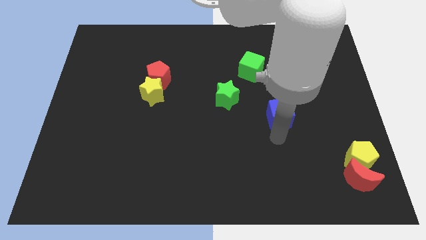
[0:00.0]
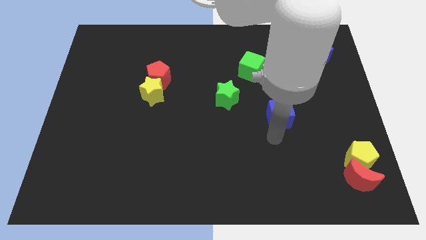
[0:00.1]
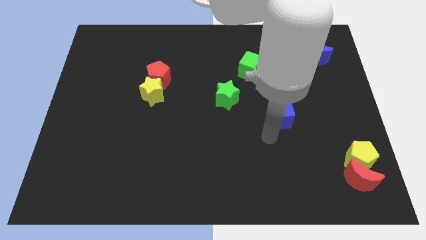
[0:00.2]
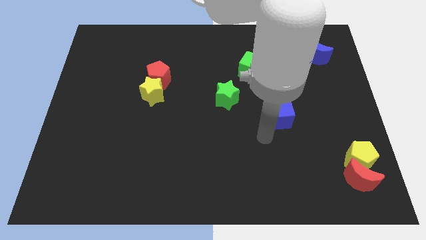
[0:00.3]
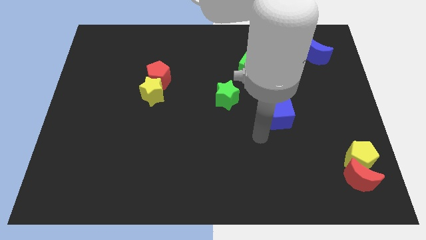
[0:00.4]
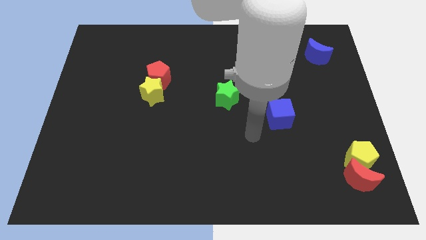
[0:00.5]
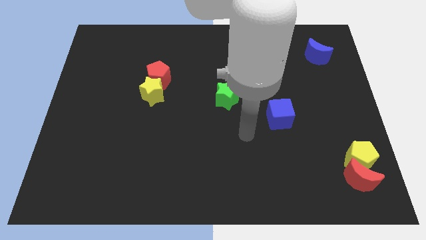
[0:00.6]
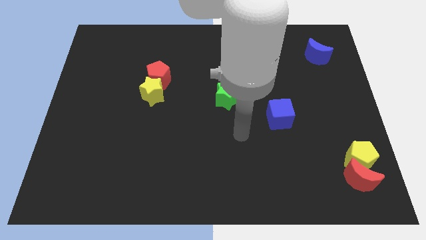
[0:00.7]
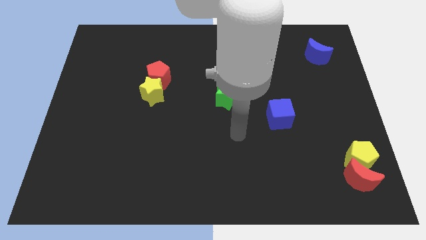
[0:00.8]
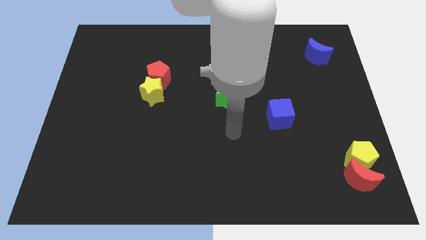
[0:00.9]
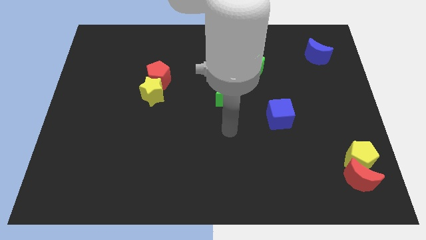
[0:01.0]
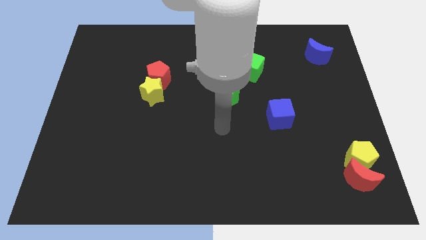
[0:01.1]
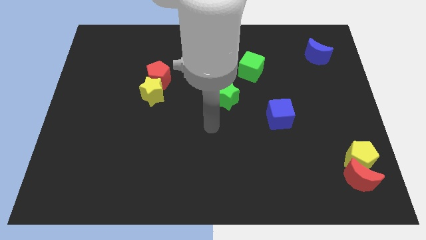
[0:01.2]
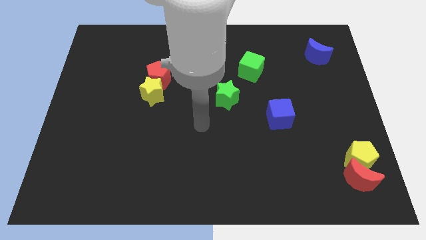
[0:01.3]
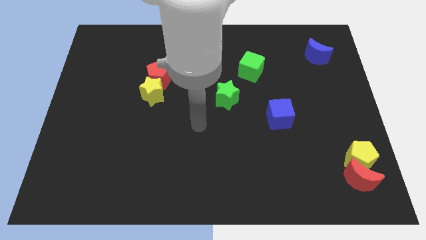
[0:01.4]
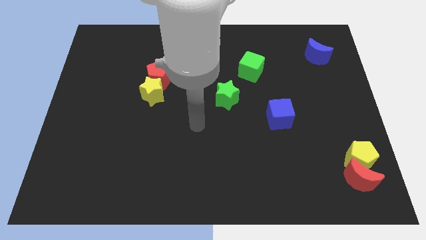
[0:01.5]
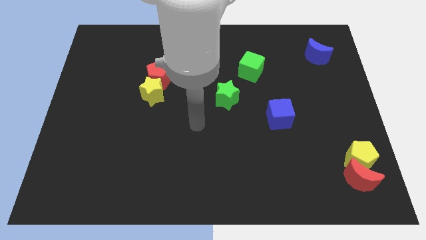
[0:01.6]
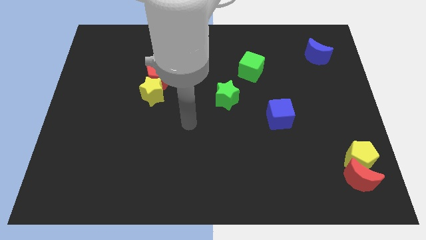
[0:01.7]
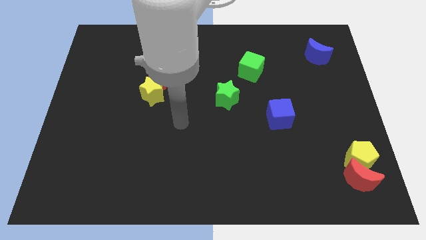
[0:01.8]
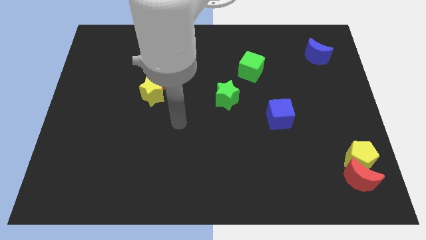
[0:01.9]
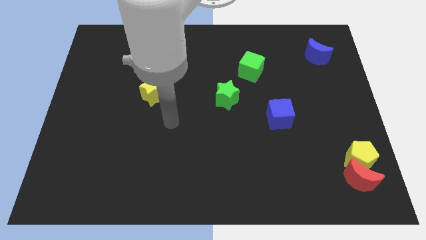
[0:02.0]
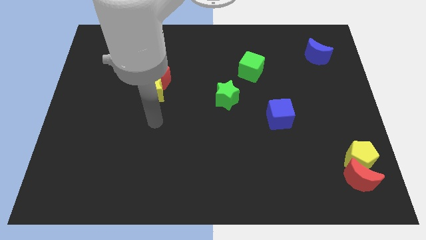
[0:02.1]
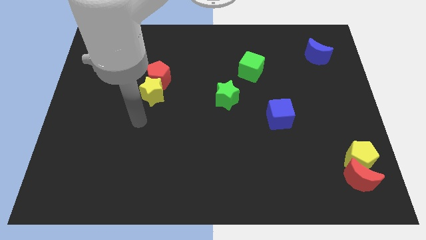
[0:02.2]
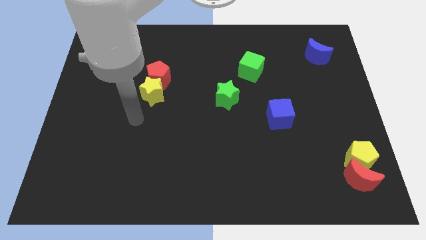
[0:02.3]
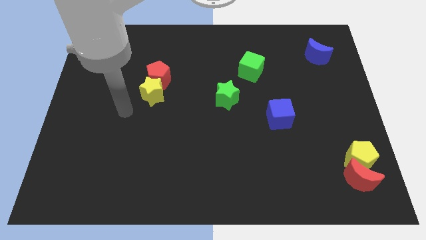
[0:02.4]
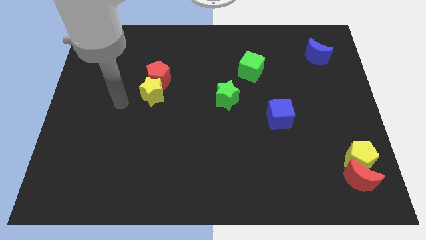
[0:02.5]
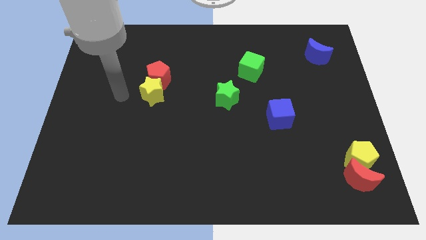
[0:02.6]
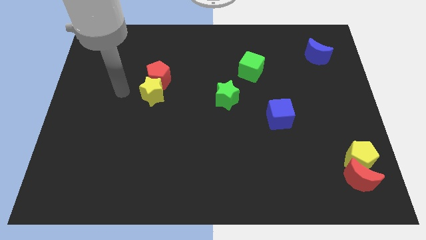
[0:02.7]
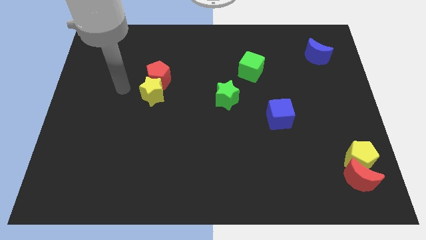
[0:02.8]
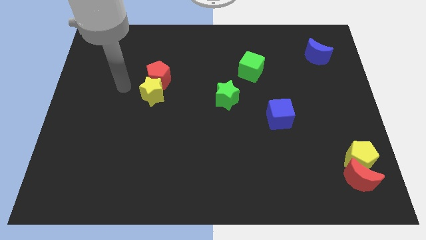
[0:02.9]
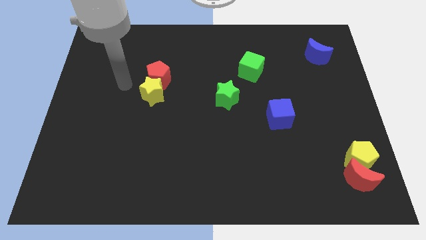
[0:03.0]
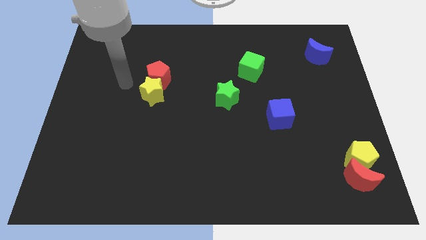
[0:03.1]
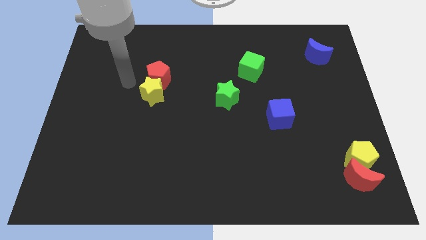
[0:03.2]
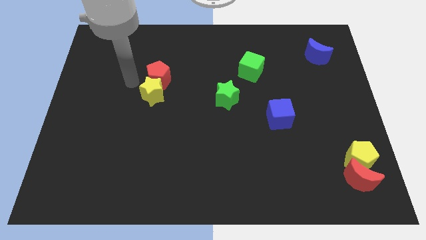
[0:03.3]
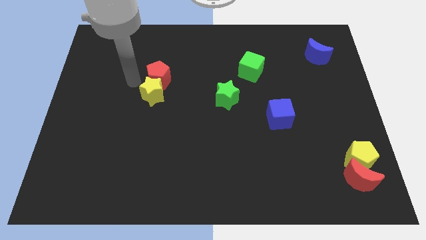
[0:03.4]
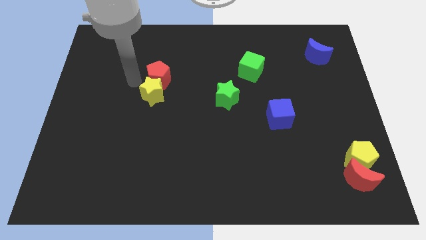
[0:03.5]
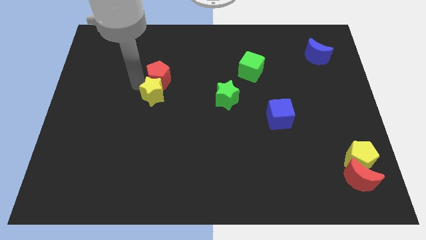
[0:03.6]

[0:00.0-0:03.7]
move your arm towards yellow star

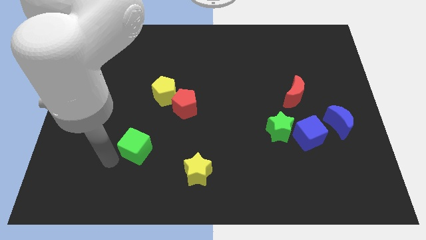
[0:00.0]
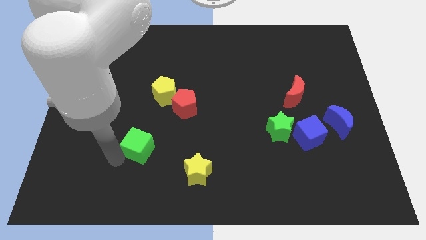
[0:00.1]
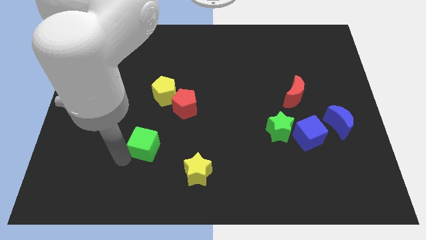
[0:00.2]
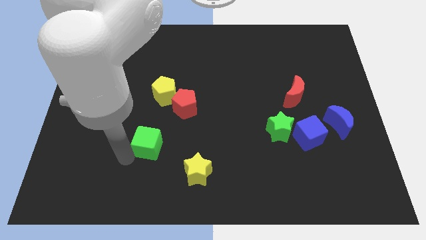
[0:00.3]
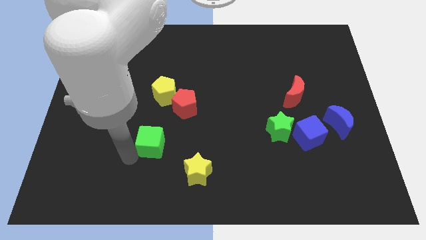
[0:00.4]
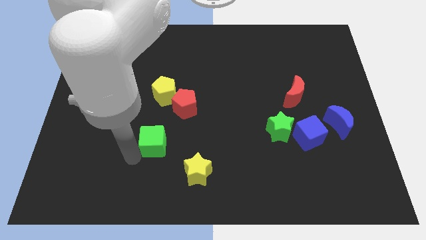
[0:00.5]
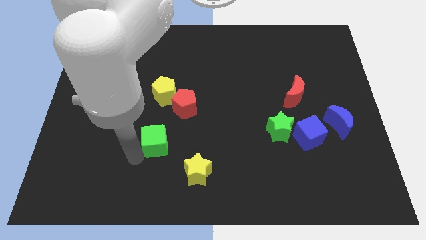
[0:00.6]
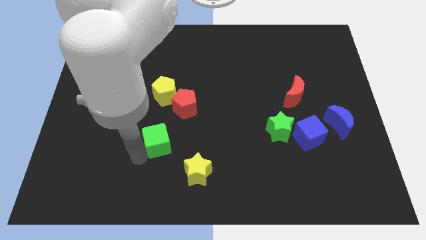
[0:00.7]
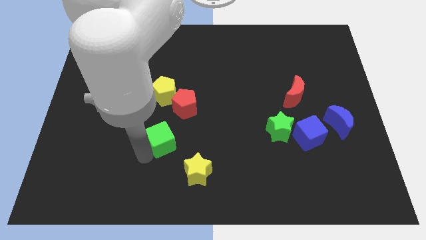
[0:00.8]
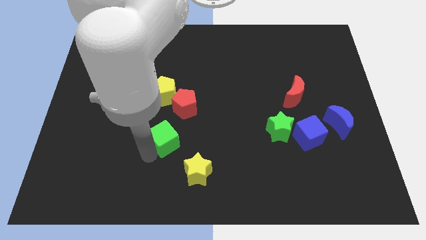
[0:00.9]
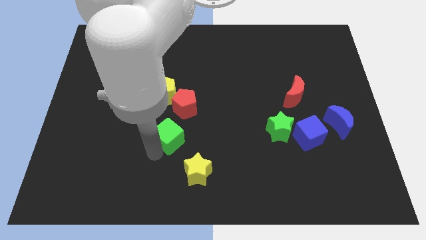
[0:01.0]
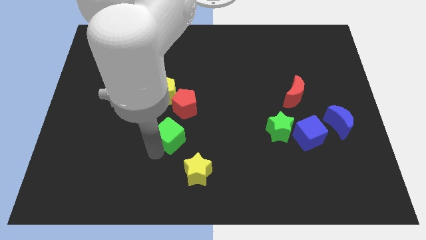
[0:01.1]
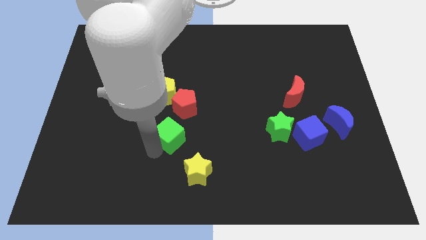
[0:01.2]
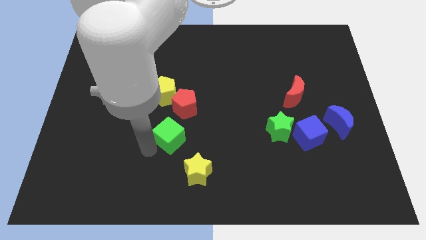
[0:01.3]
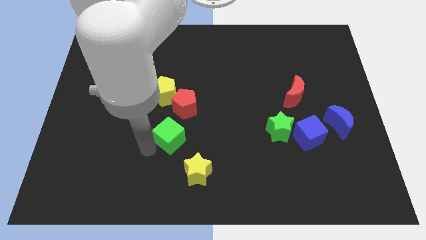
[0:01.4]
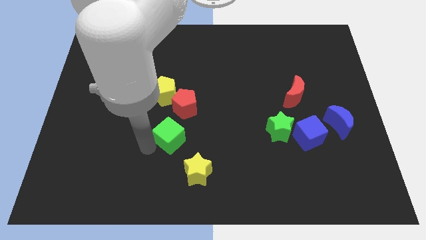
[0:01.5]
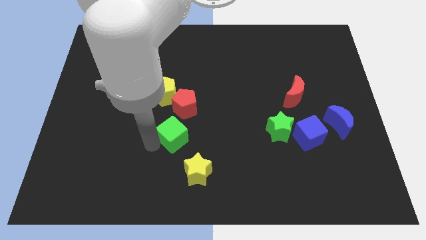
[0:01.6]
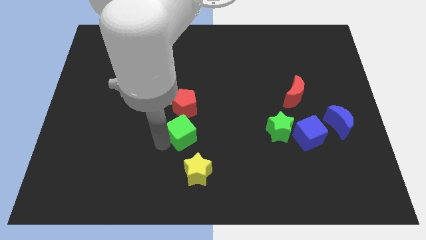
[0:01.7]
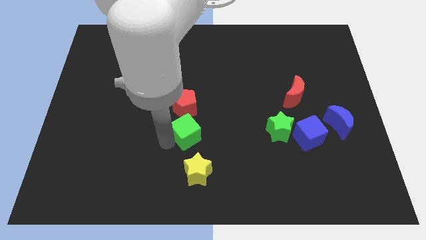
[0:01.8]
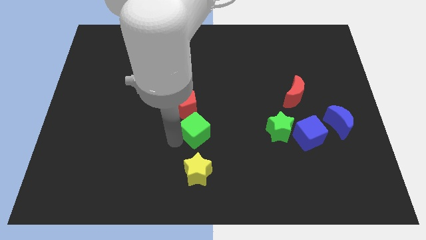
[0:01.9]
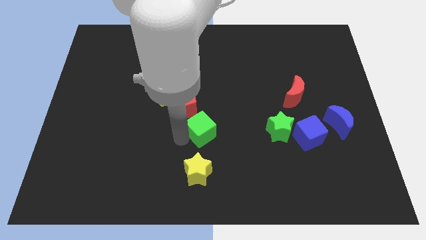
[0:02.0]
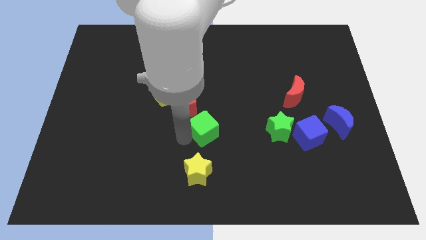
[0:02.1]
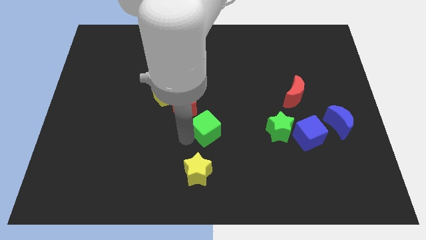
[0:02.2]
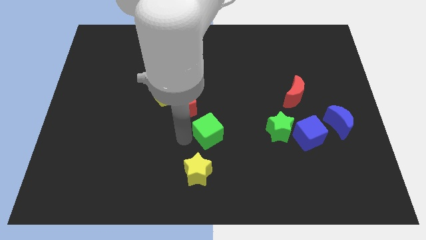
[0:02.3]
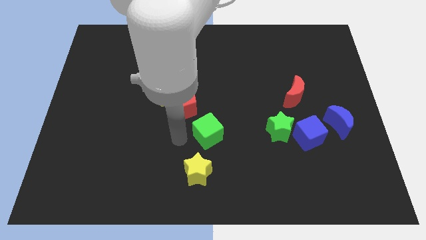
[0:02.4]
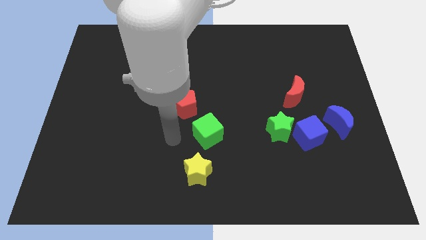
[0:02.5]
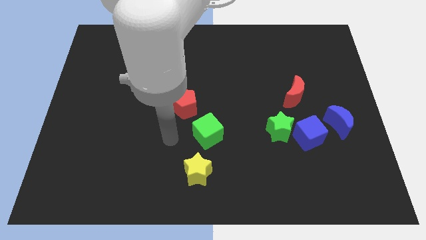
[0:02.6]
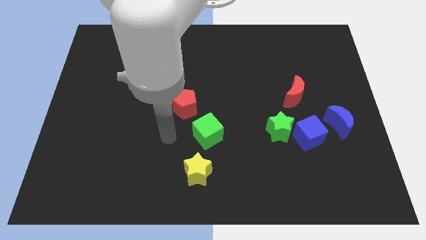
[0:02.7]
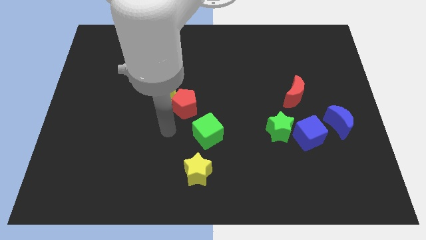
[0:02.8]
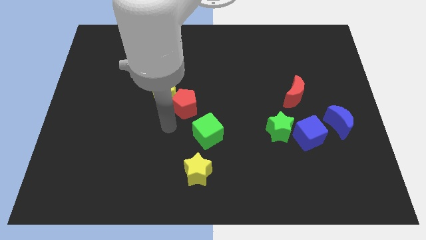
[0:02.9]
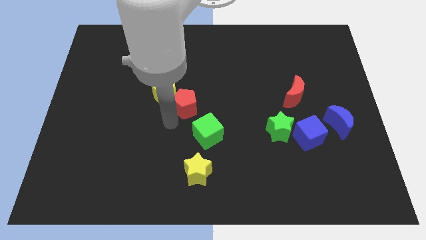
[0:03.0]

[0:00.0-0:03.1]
place green cube to the center

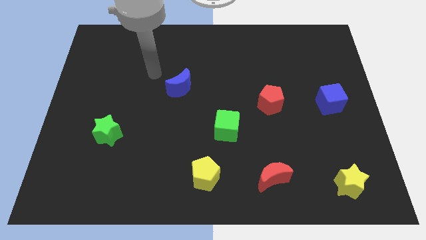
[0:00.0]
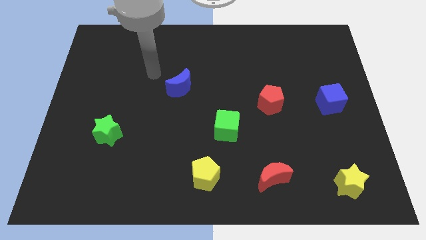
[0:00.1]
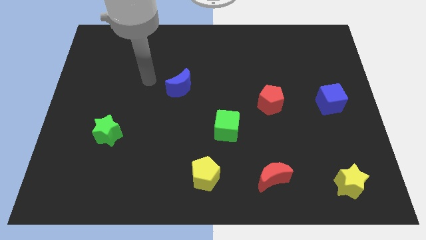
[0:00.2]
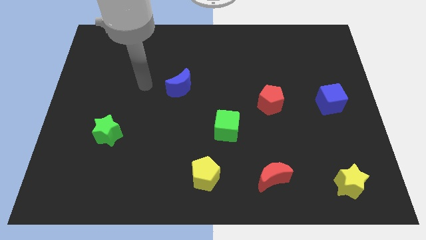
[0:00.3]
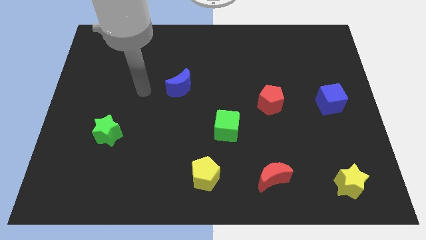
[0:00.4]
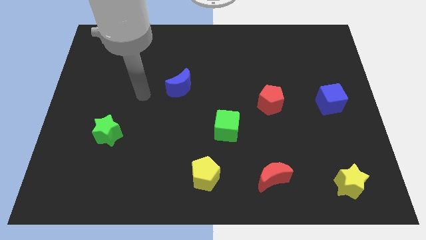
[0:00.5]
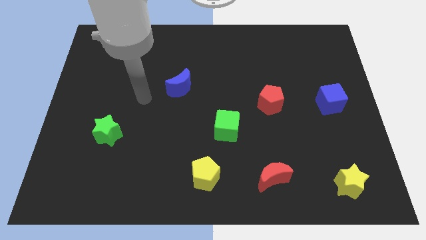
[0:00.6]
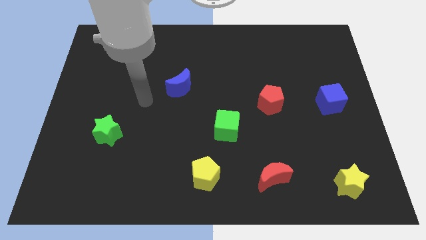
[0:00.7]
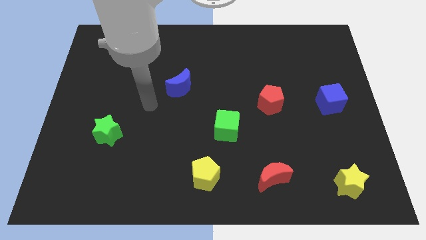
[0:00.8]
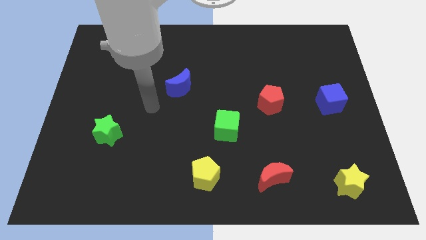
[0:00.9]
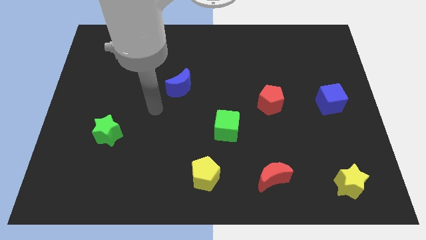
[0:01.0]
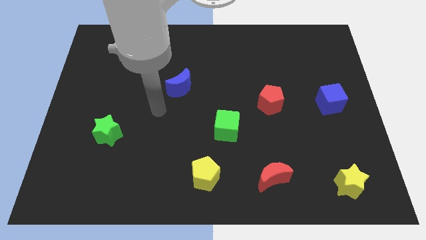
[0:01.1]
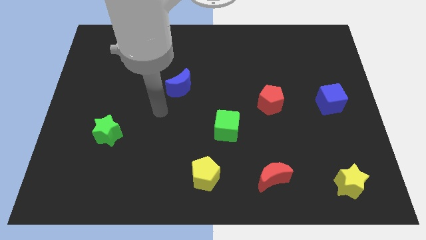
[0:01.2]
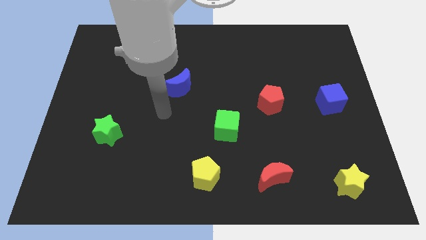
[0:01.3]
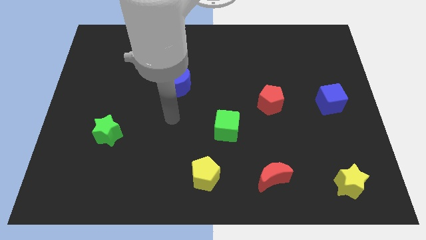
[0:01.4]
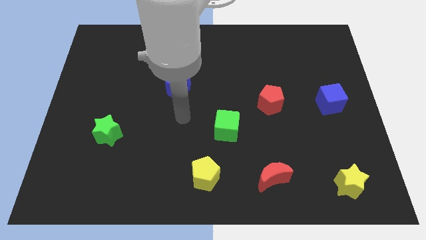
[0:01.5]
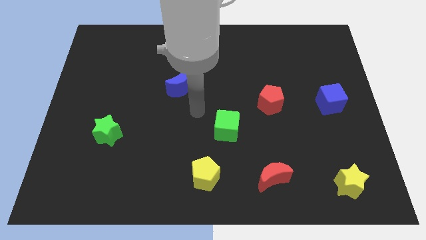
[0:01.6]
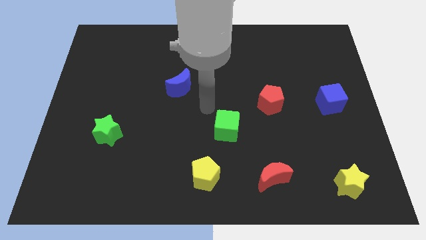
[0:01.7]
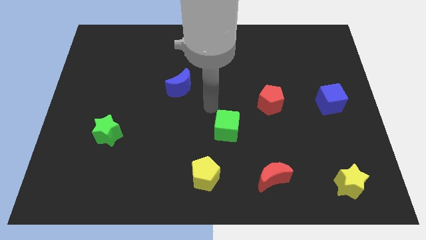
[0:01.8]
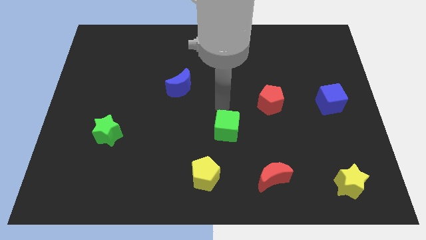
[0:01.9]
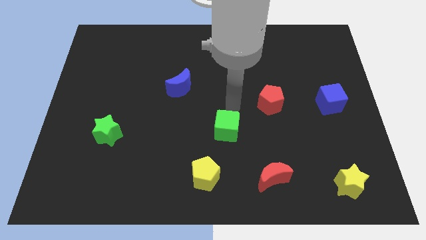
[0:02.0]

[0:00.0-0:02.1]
move your arm above the green cube
